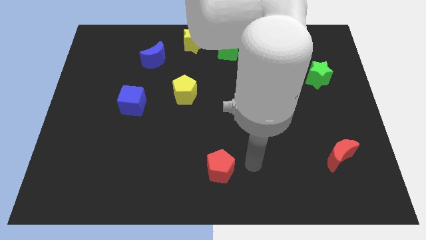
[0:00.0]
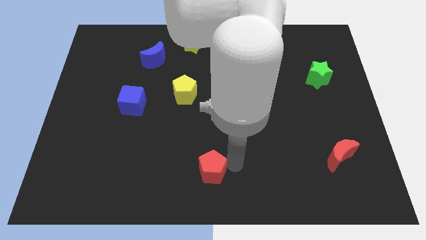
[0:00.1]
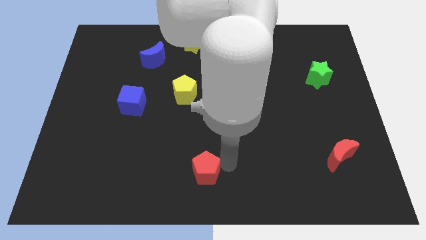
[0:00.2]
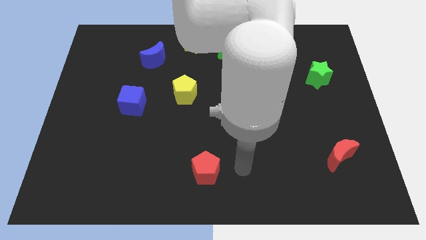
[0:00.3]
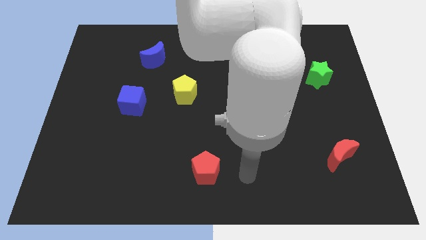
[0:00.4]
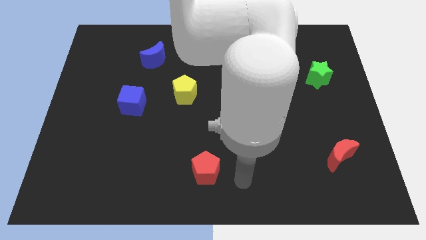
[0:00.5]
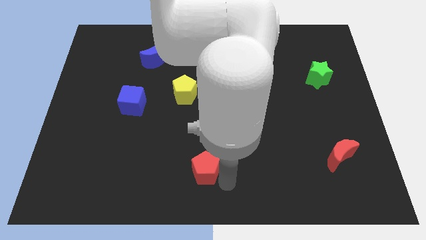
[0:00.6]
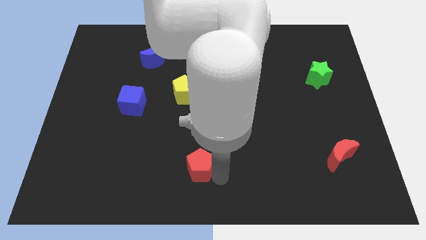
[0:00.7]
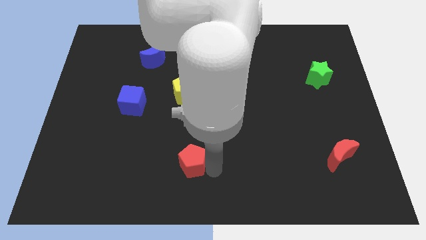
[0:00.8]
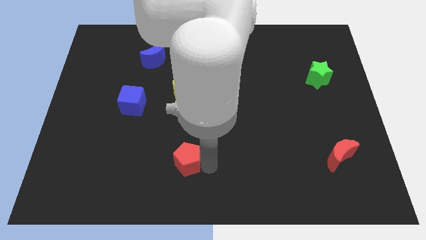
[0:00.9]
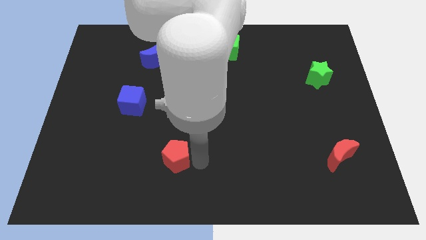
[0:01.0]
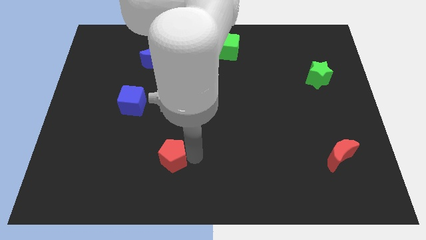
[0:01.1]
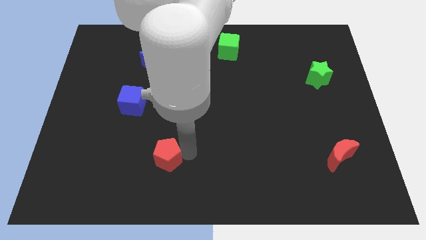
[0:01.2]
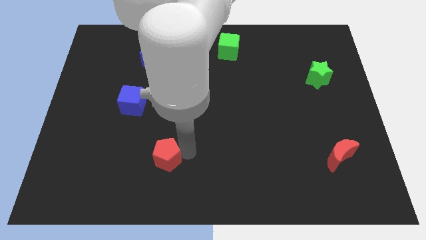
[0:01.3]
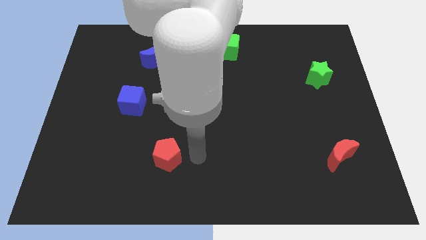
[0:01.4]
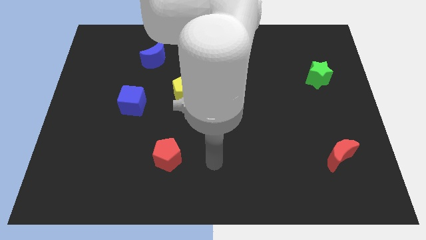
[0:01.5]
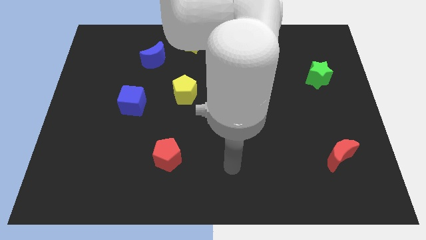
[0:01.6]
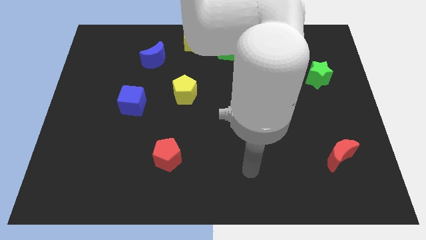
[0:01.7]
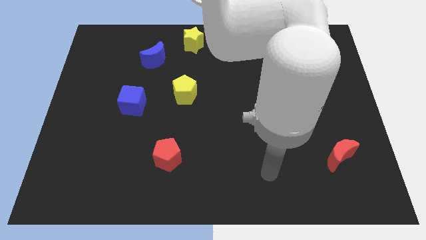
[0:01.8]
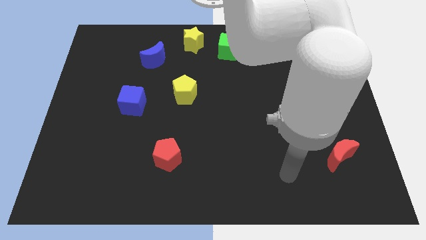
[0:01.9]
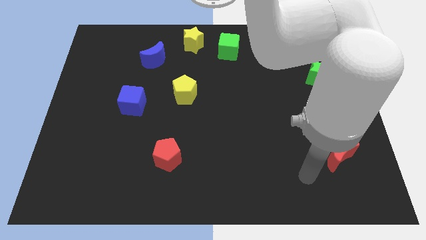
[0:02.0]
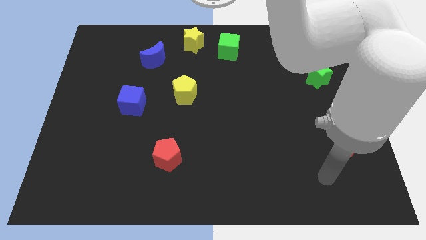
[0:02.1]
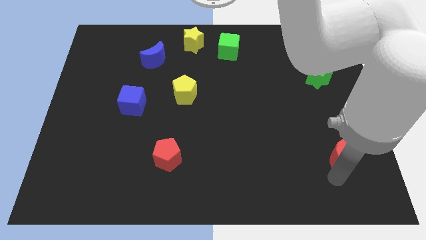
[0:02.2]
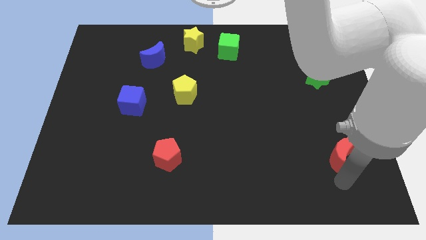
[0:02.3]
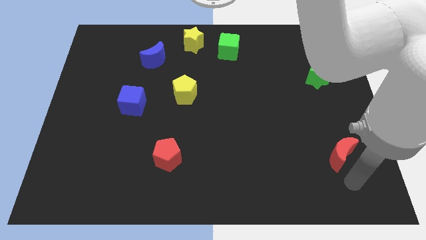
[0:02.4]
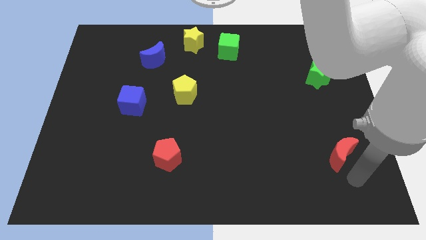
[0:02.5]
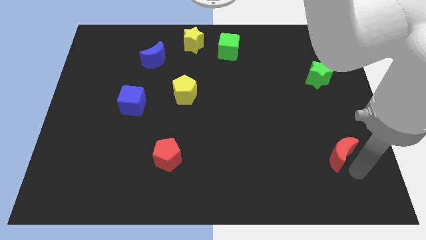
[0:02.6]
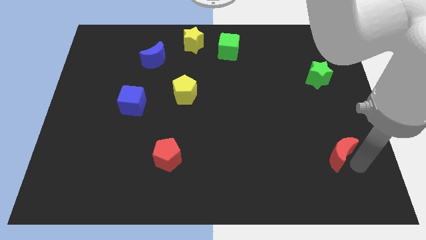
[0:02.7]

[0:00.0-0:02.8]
place the red pentagon diagonally to the blue cube

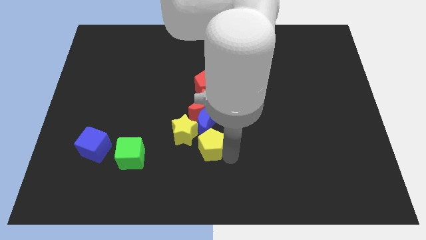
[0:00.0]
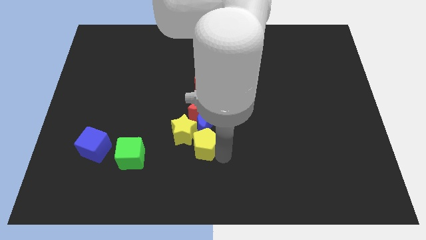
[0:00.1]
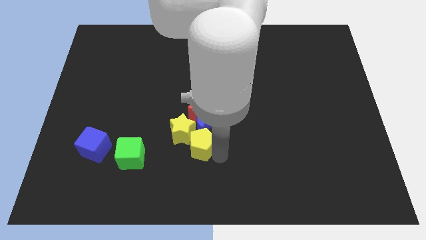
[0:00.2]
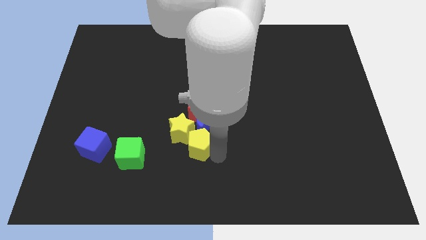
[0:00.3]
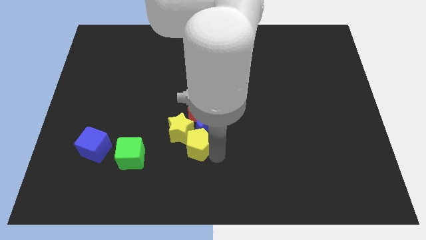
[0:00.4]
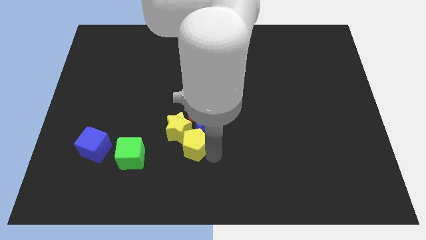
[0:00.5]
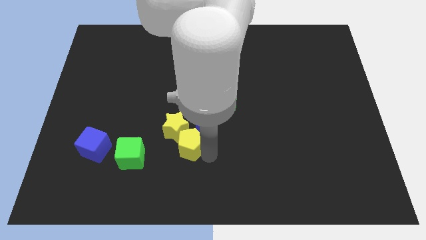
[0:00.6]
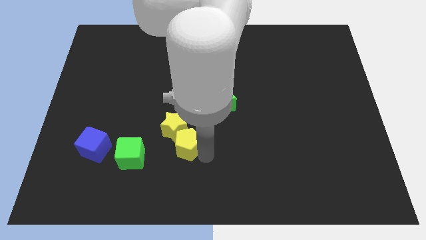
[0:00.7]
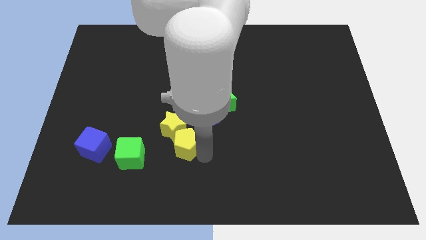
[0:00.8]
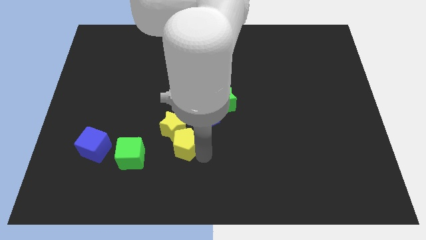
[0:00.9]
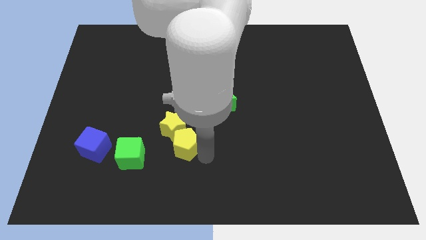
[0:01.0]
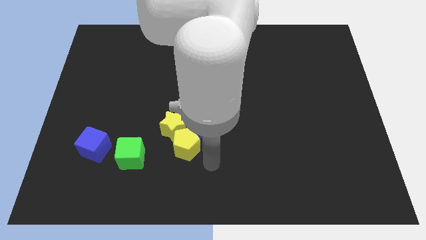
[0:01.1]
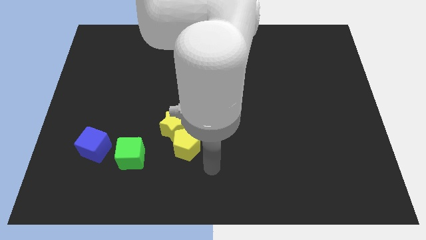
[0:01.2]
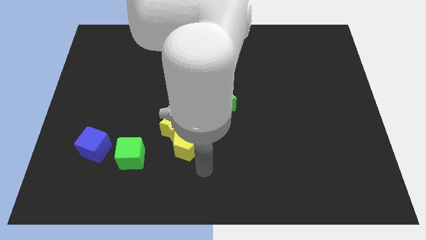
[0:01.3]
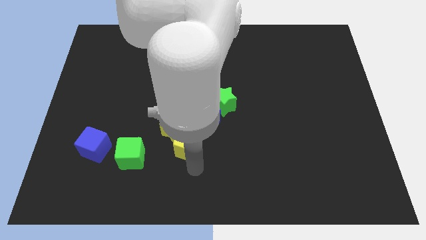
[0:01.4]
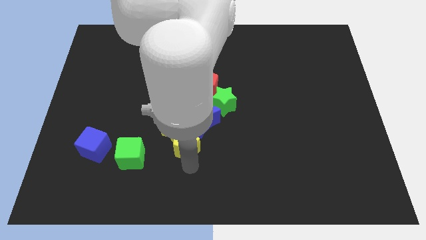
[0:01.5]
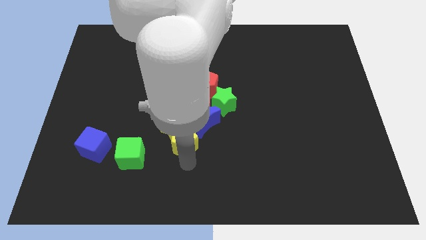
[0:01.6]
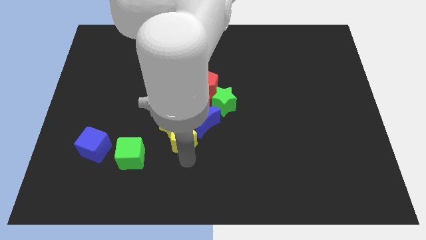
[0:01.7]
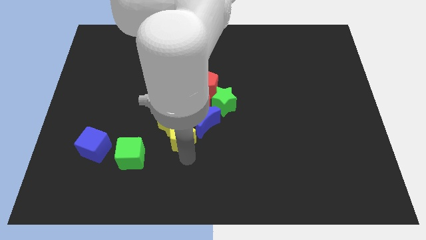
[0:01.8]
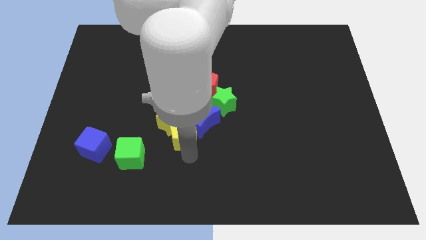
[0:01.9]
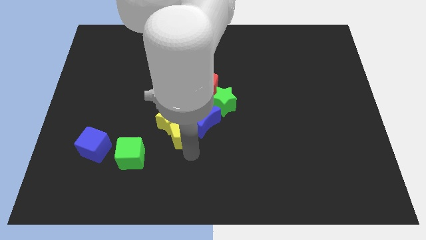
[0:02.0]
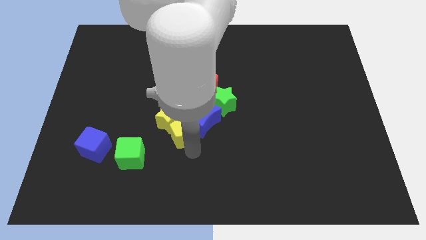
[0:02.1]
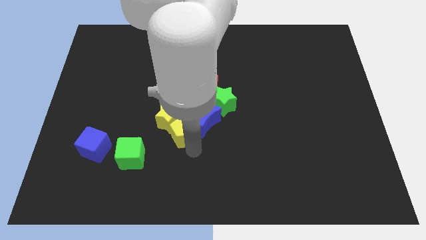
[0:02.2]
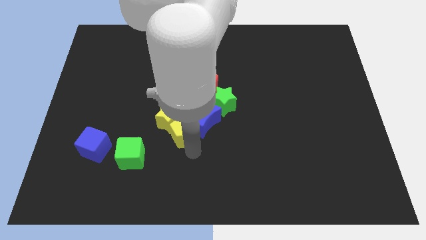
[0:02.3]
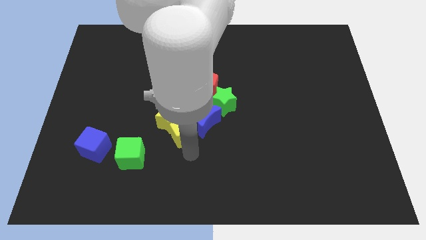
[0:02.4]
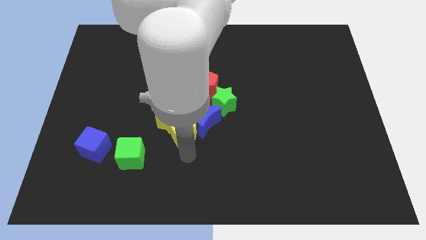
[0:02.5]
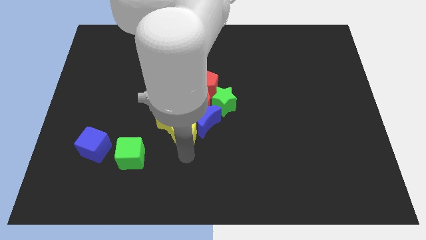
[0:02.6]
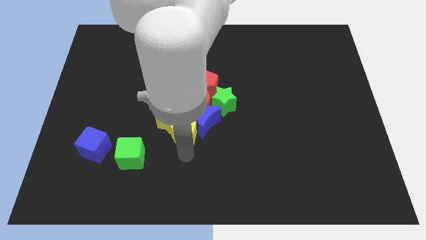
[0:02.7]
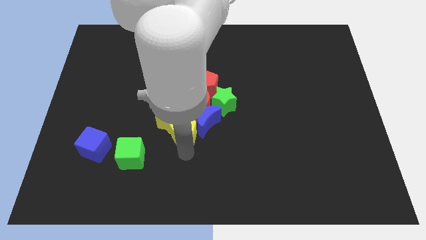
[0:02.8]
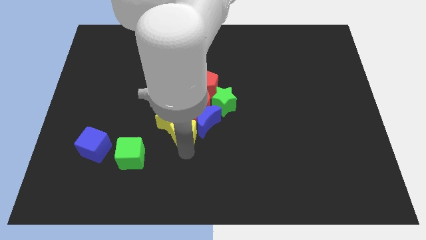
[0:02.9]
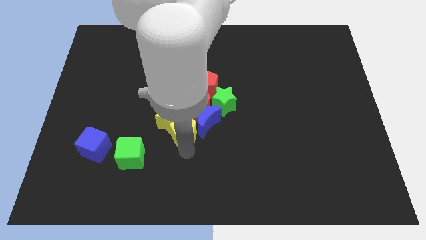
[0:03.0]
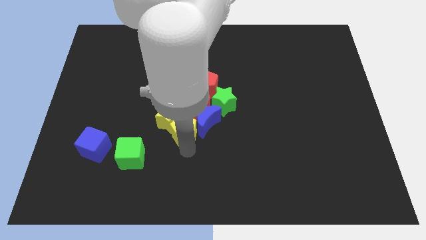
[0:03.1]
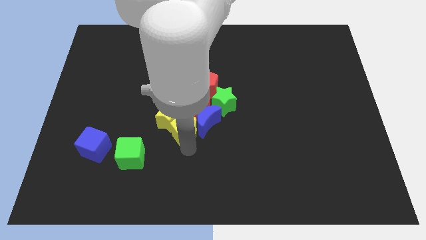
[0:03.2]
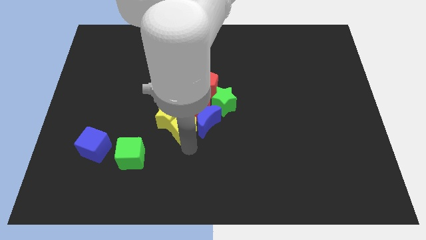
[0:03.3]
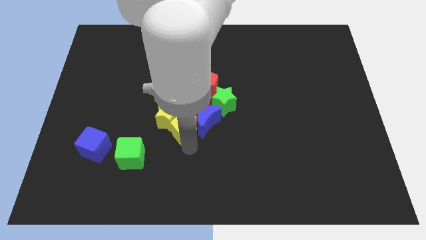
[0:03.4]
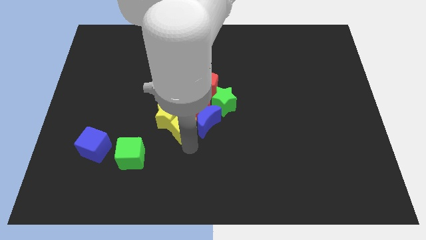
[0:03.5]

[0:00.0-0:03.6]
push the yellow pentagon into yellow star

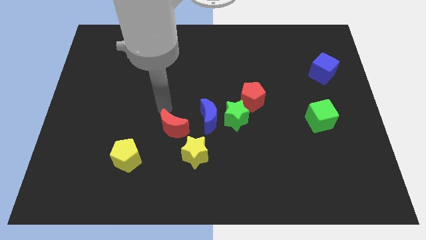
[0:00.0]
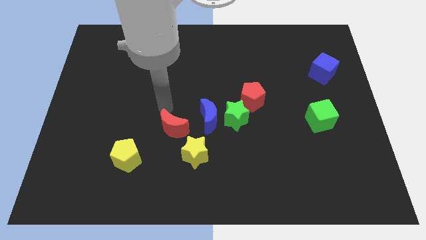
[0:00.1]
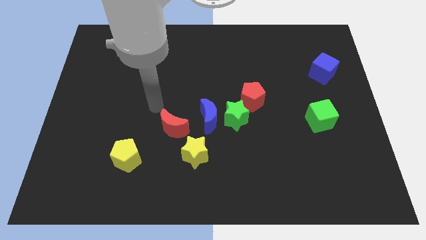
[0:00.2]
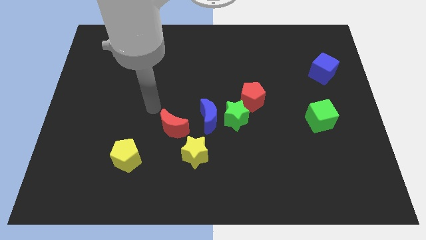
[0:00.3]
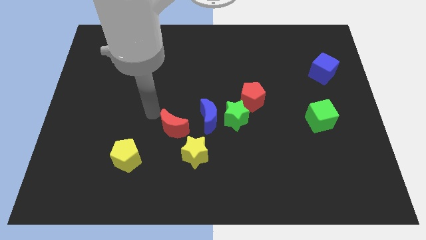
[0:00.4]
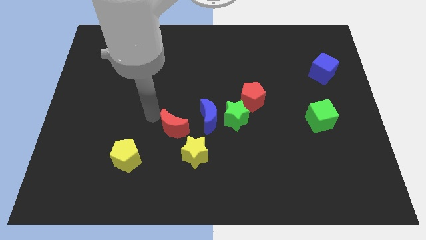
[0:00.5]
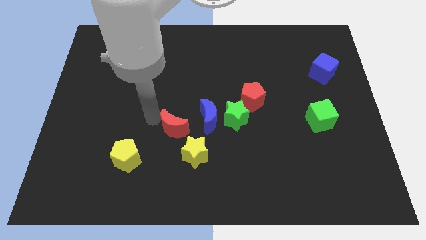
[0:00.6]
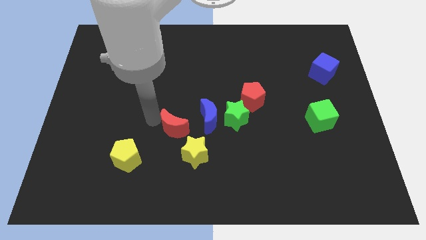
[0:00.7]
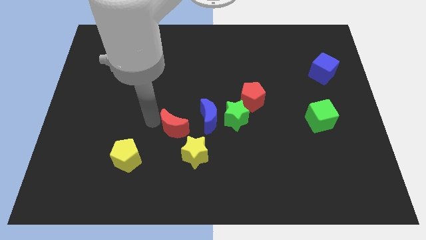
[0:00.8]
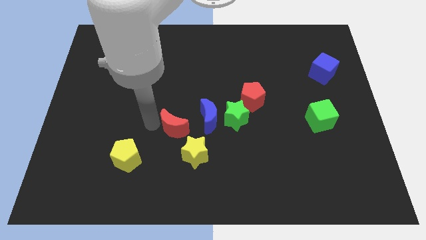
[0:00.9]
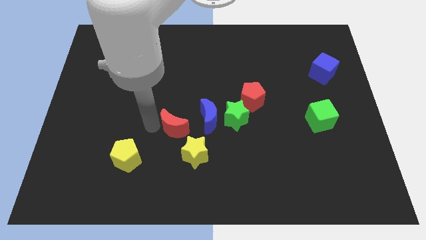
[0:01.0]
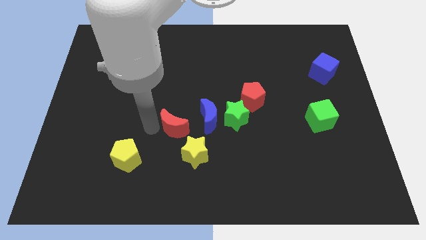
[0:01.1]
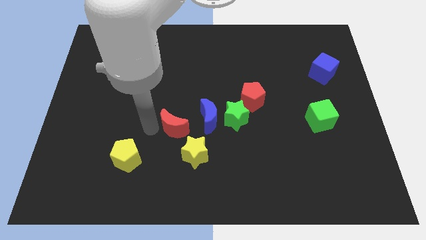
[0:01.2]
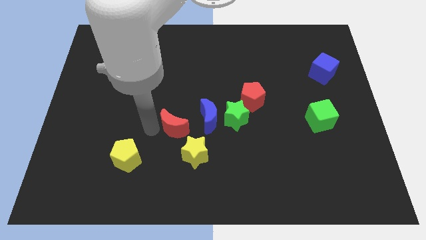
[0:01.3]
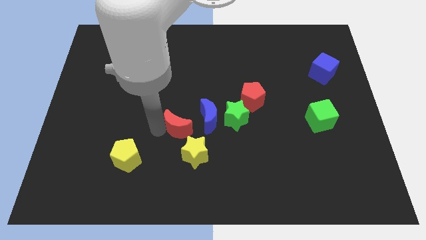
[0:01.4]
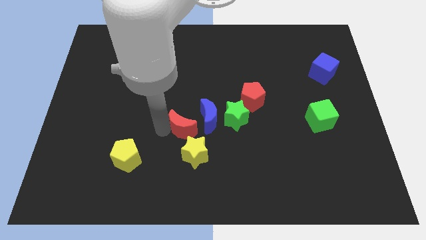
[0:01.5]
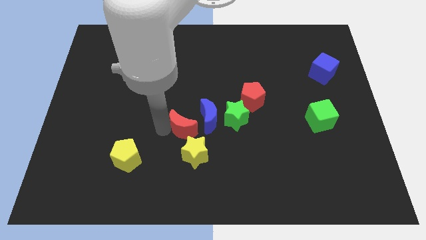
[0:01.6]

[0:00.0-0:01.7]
move the red crescent close to the blue crescent

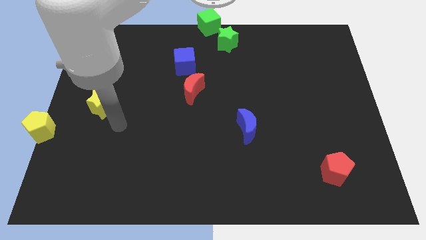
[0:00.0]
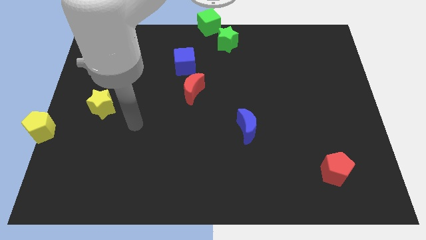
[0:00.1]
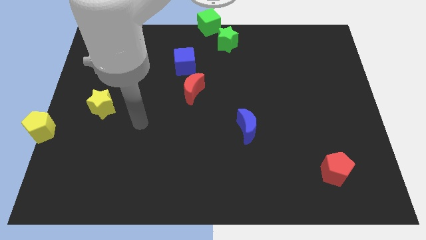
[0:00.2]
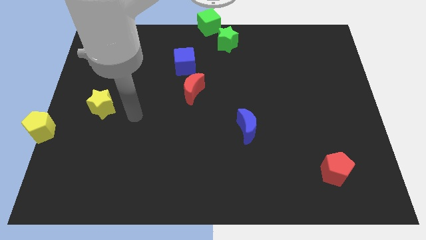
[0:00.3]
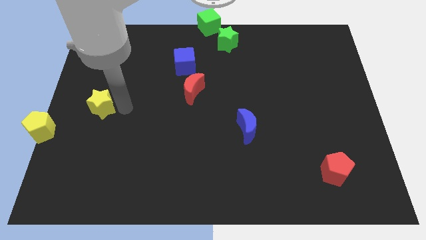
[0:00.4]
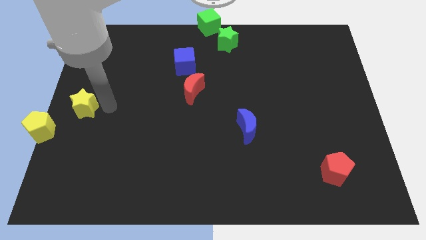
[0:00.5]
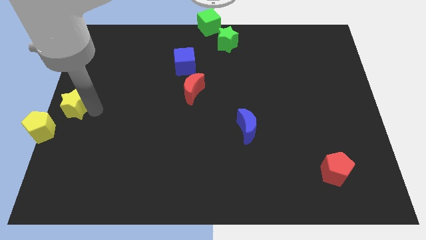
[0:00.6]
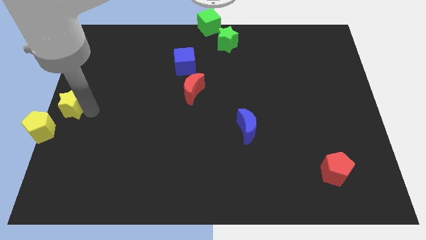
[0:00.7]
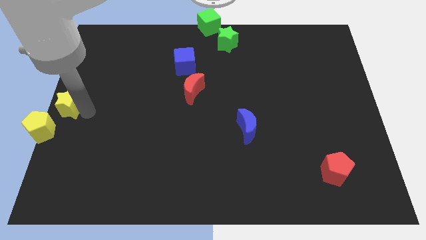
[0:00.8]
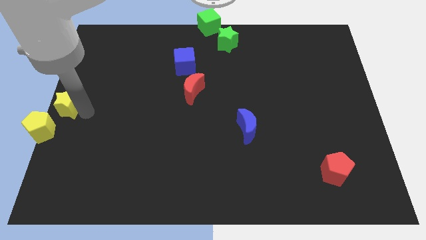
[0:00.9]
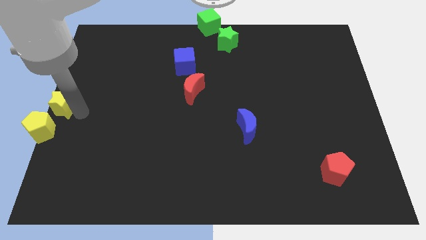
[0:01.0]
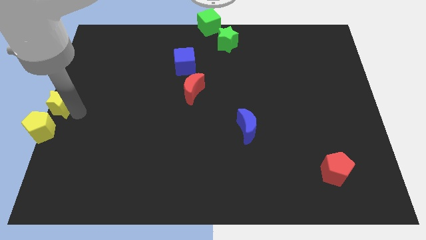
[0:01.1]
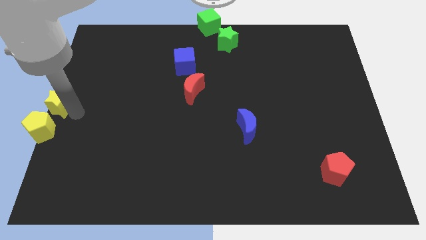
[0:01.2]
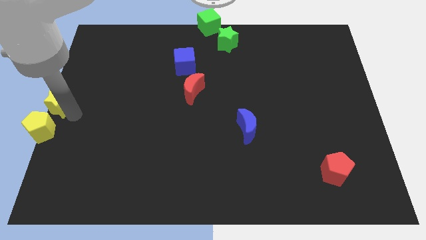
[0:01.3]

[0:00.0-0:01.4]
place yellow star close to the yellow pentagon
